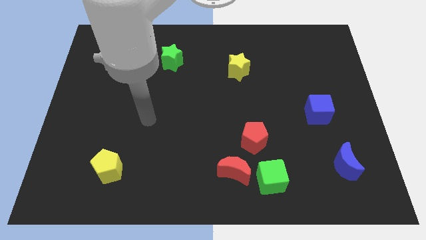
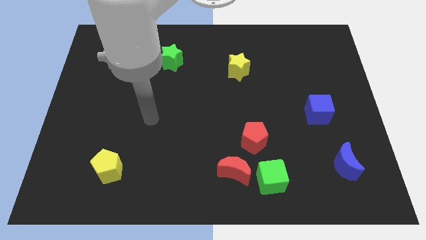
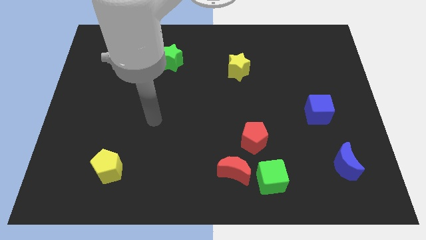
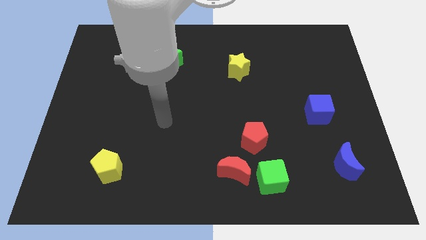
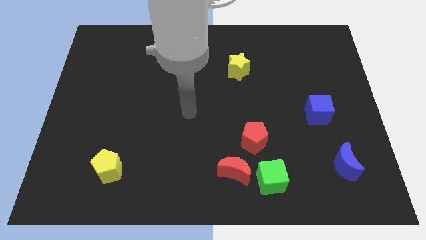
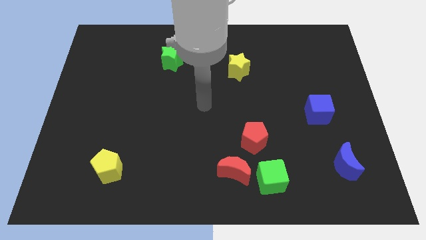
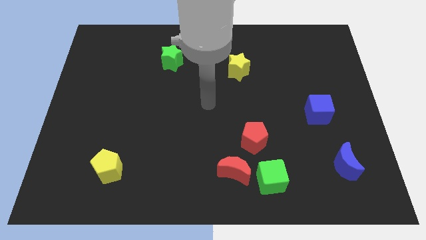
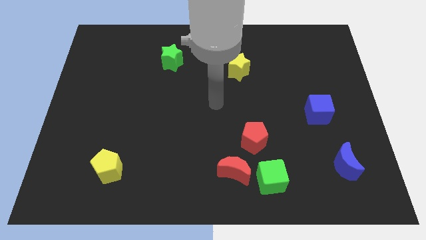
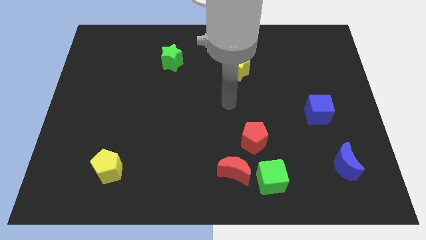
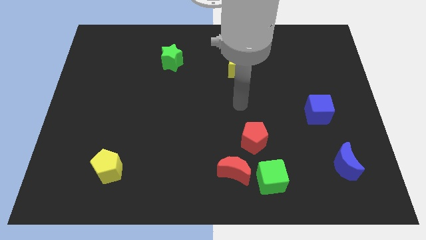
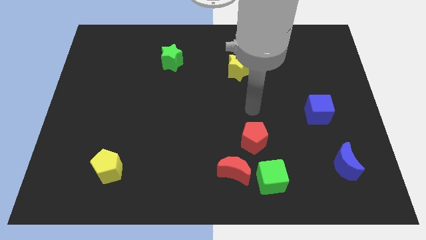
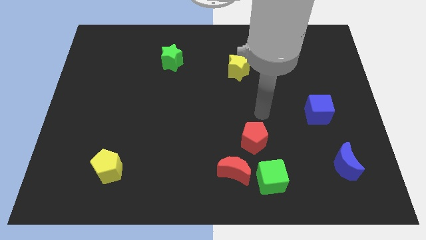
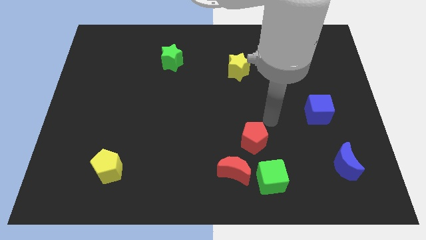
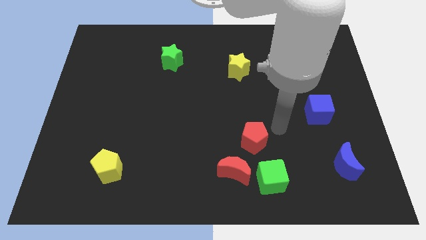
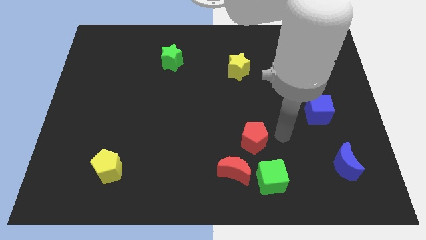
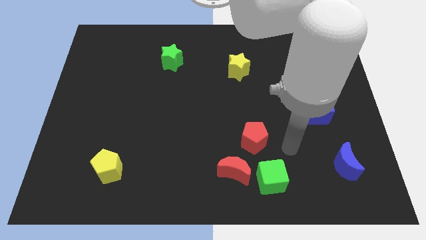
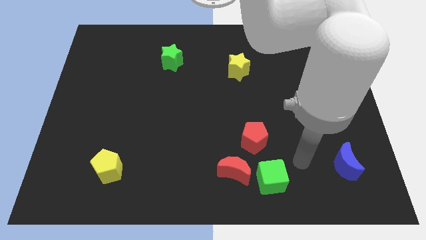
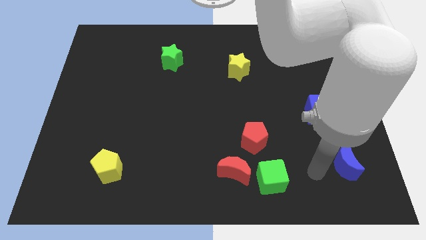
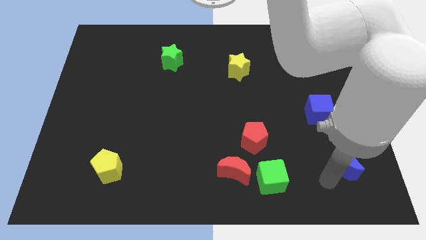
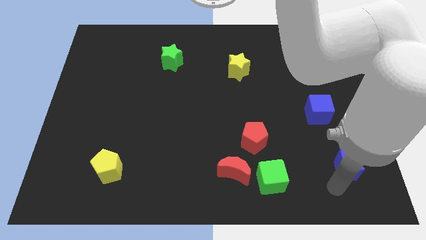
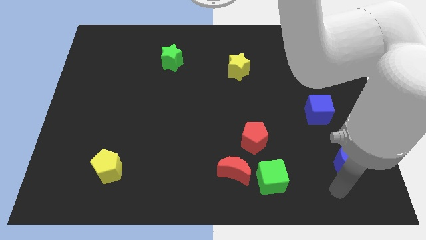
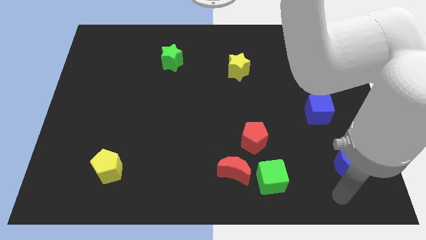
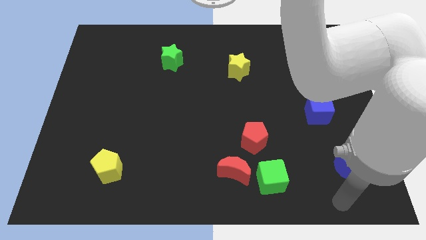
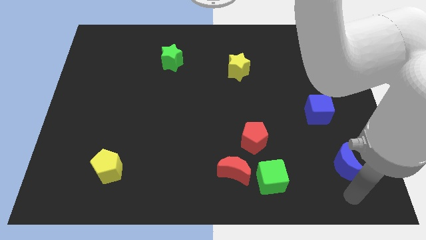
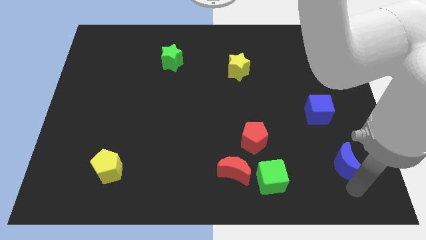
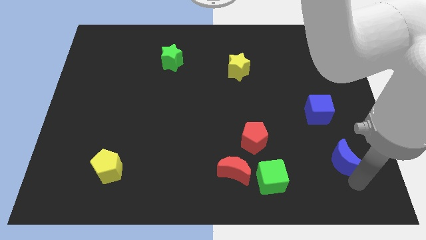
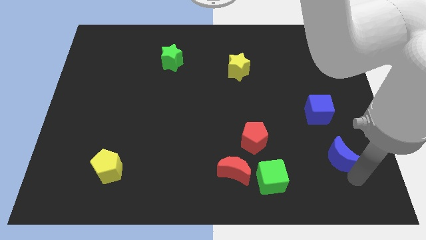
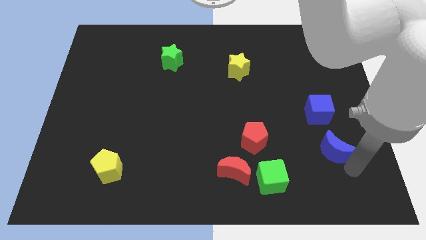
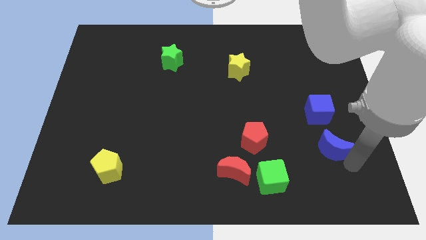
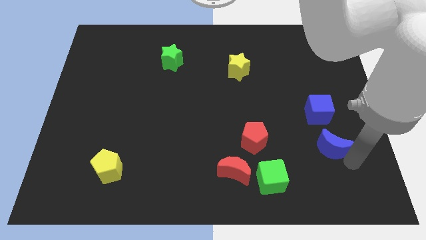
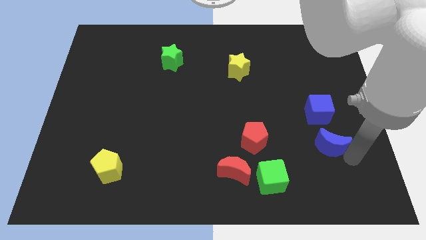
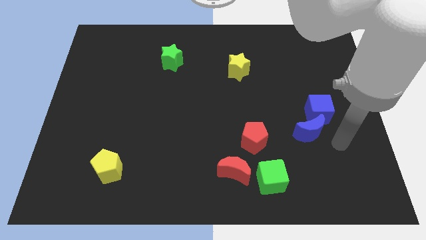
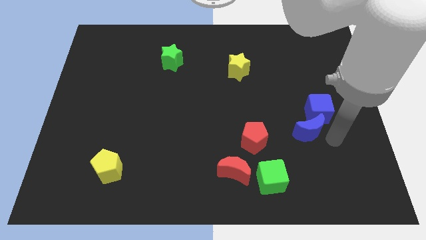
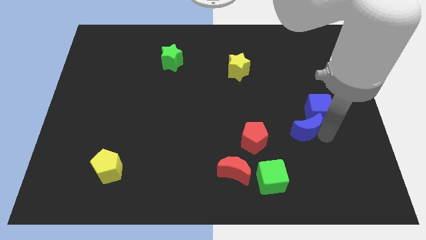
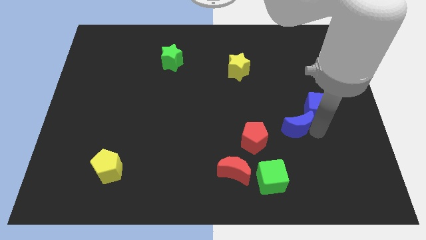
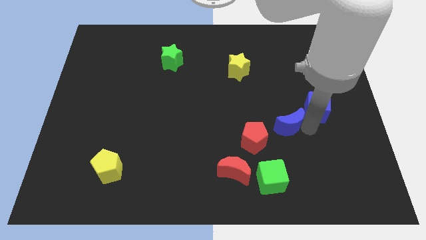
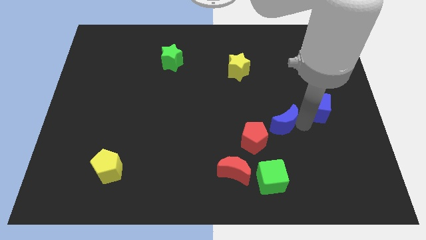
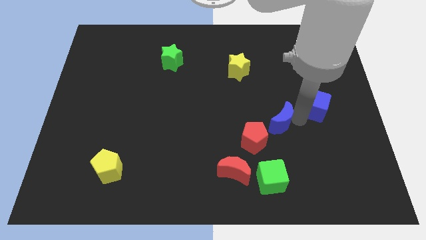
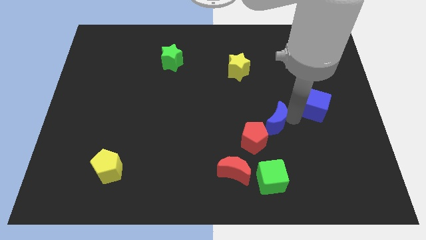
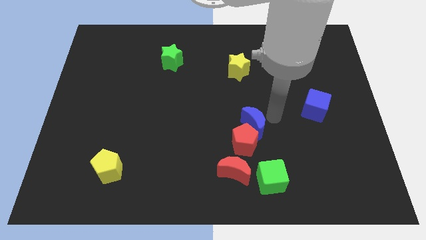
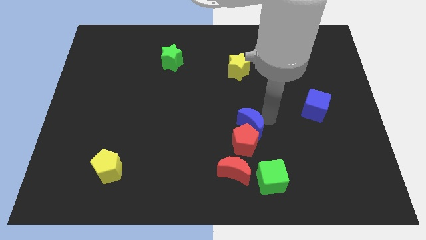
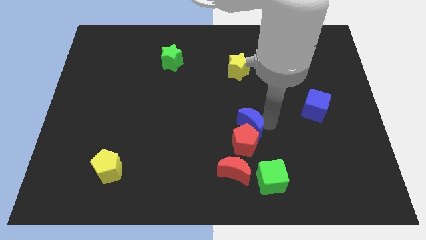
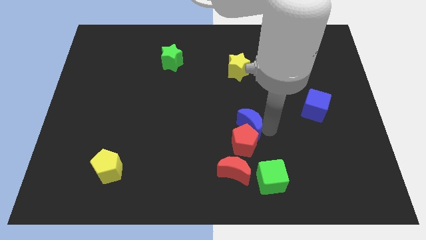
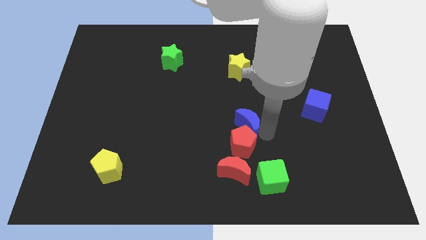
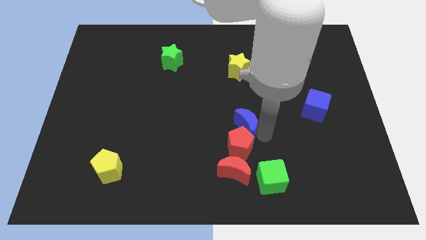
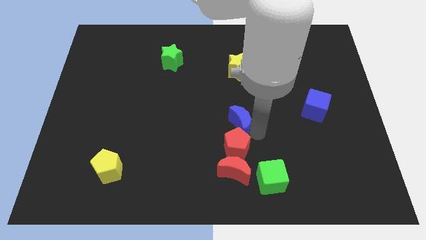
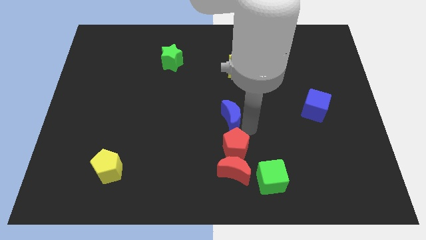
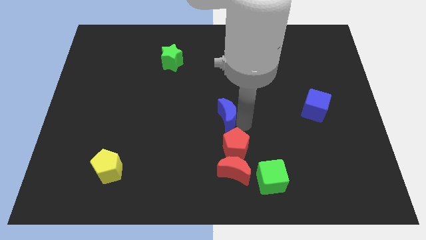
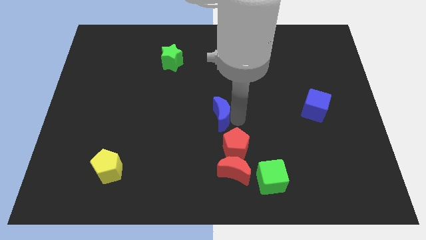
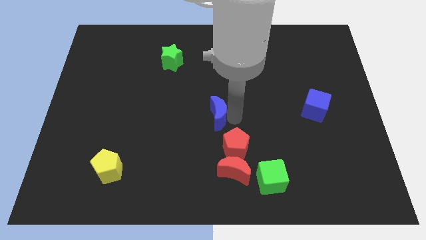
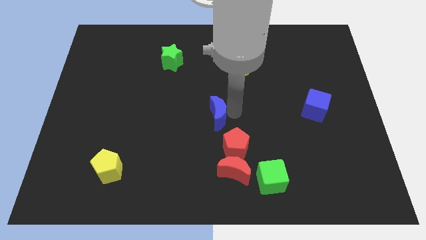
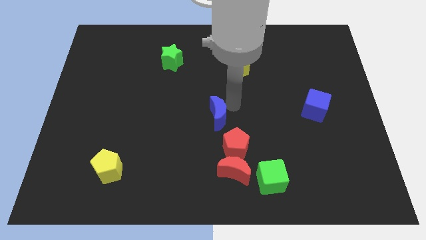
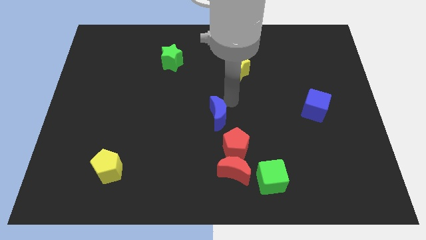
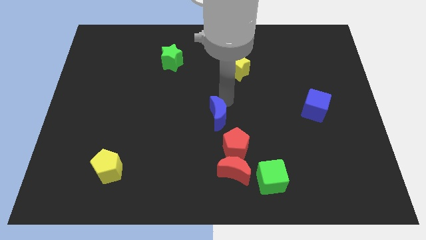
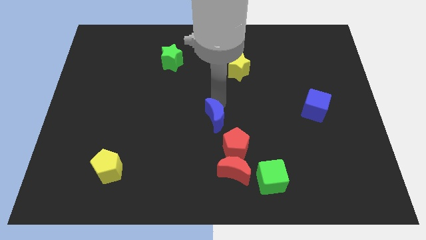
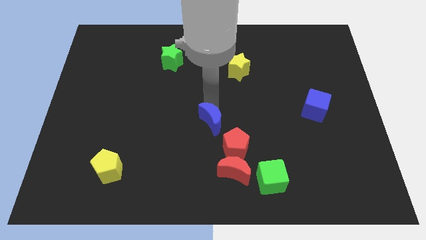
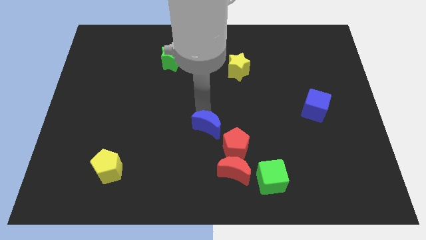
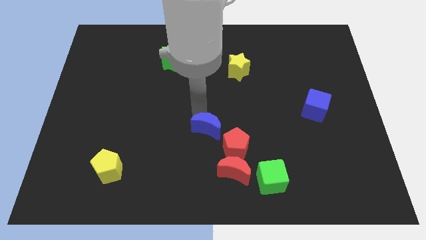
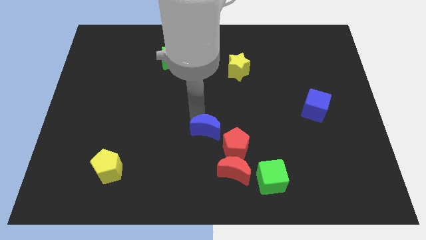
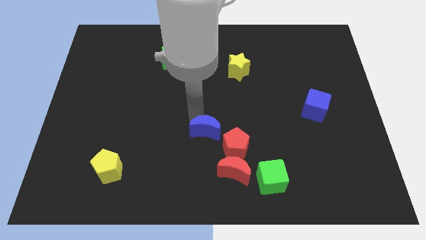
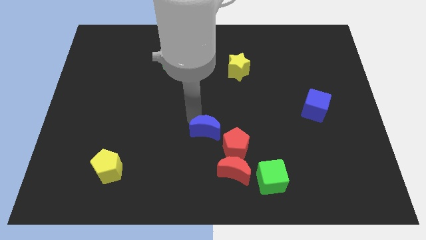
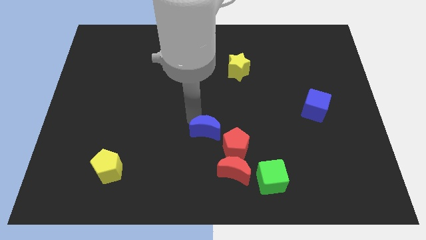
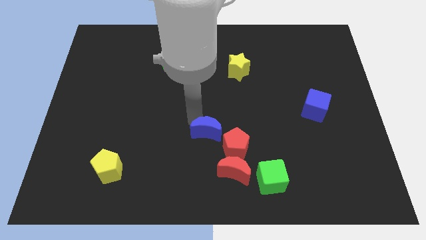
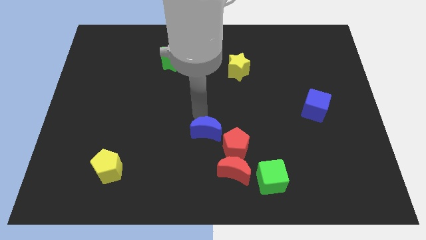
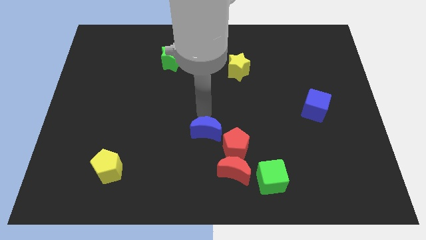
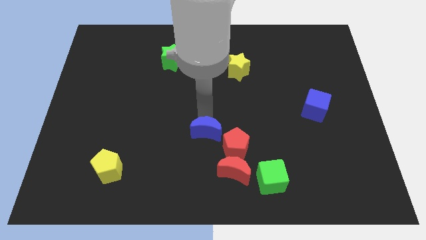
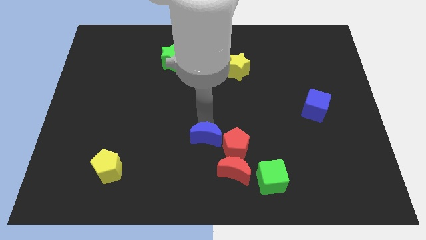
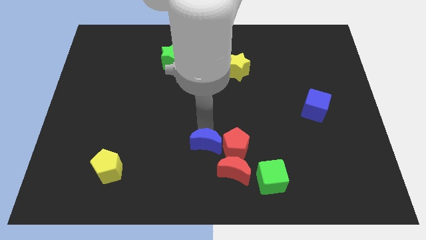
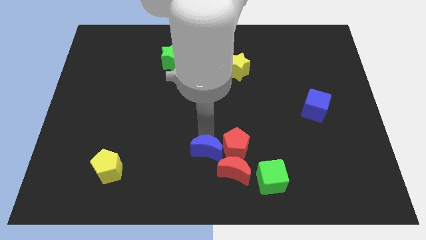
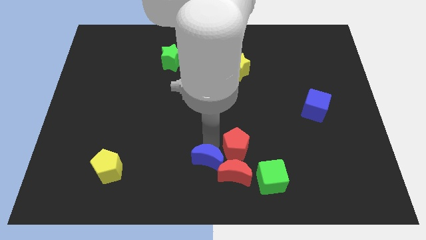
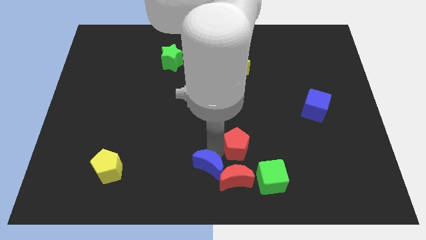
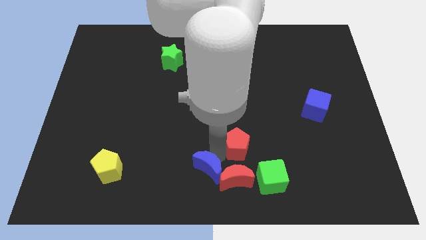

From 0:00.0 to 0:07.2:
put the blue moon close to the red moon

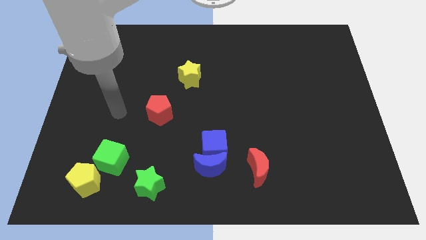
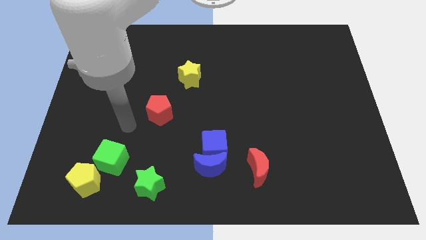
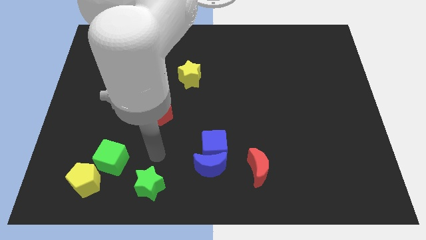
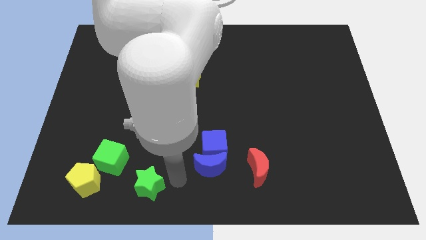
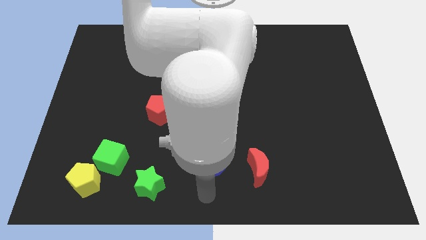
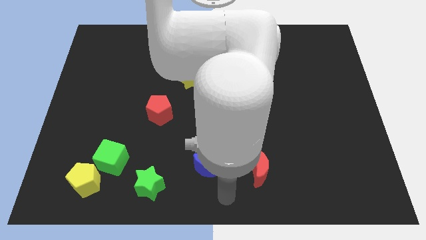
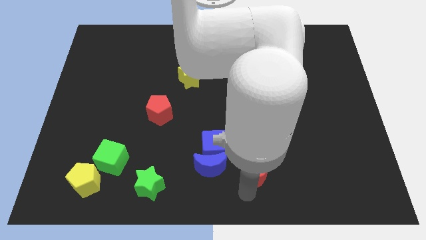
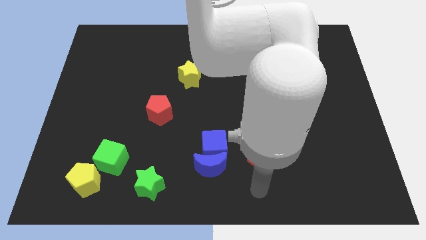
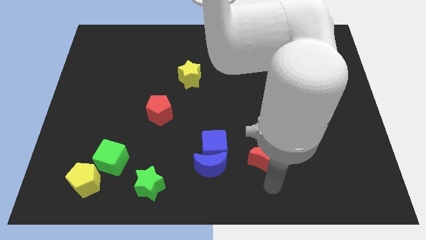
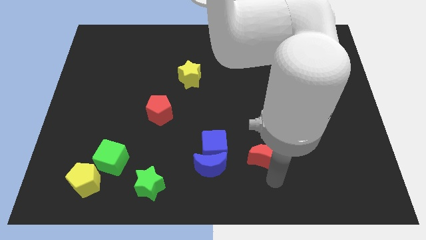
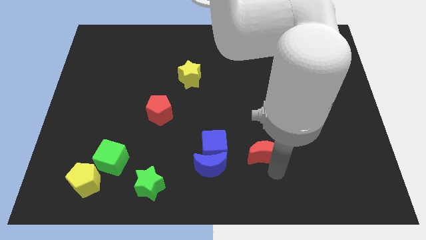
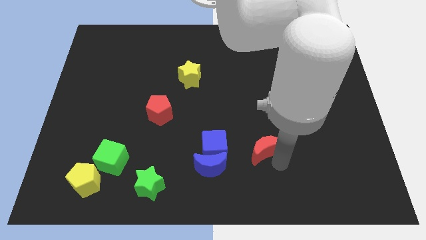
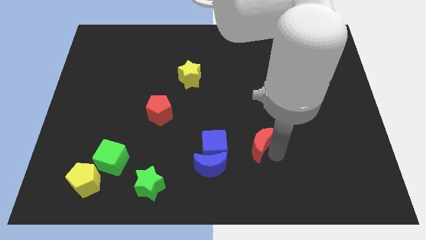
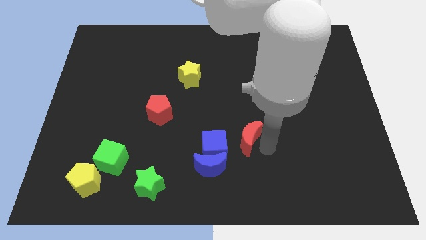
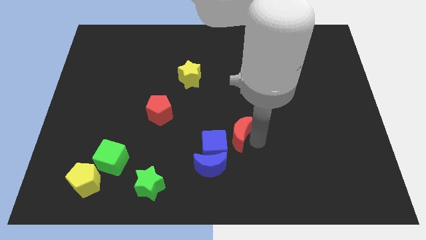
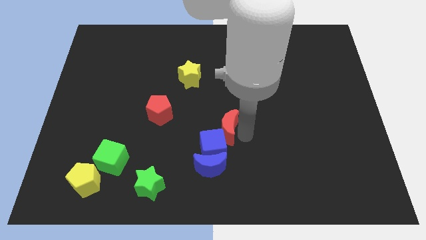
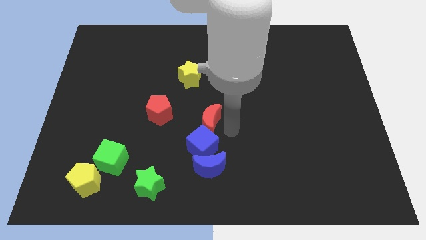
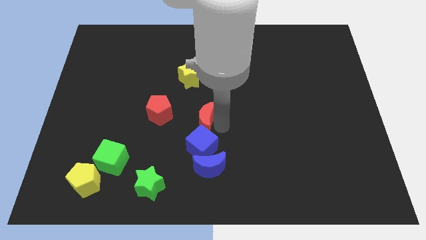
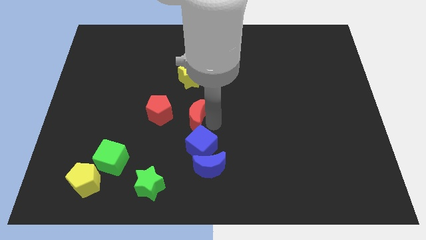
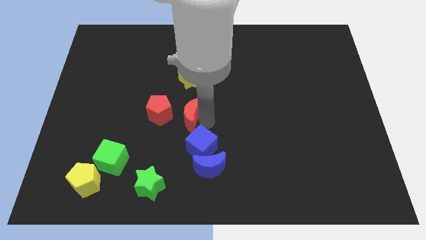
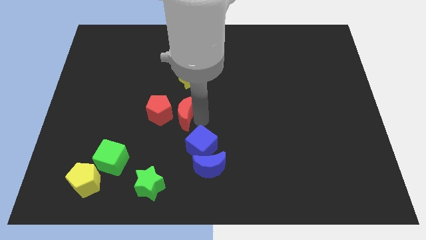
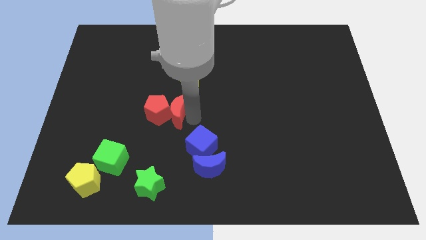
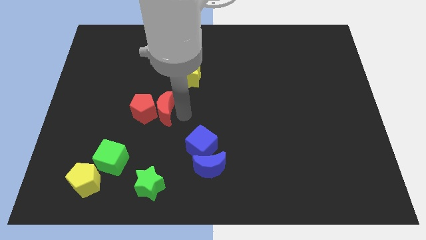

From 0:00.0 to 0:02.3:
push the red moon close to the red pentagon
